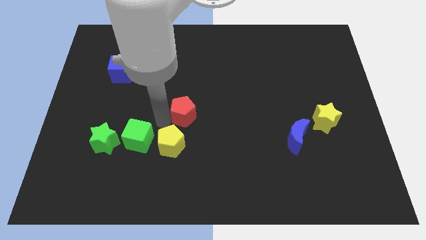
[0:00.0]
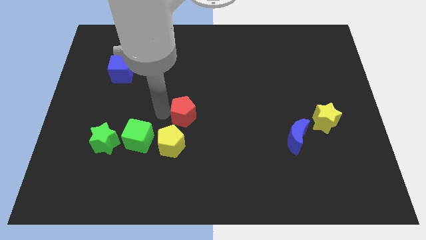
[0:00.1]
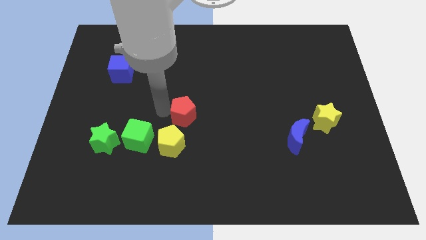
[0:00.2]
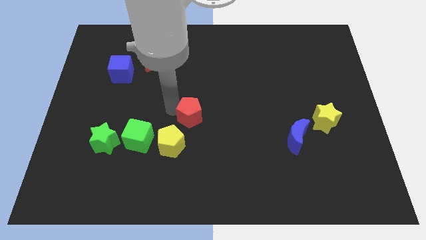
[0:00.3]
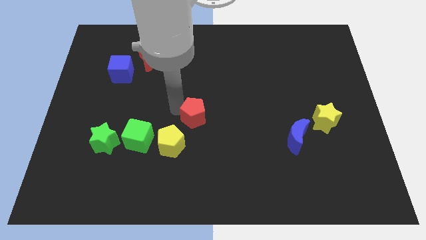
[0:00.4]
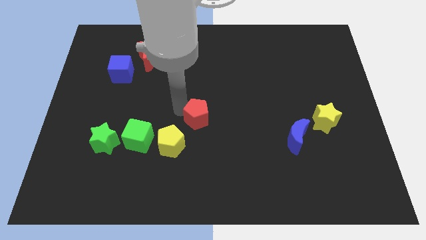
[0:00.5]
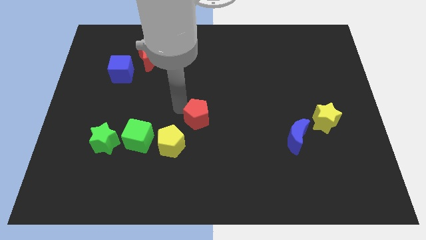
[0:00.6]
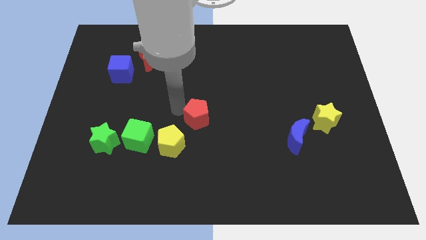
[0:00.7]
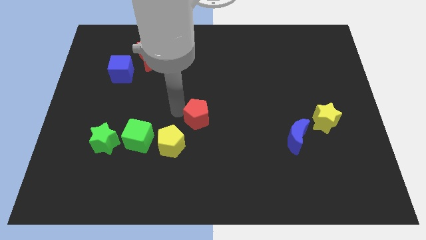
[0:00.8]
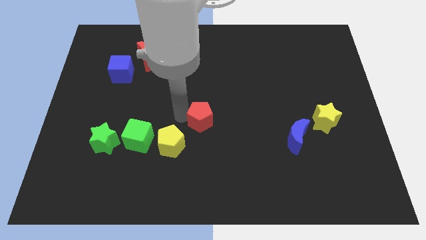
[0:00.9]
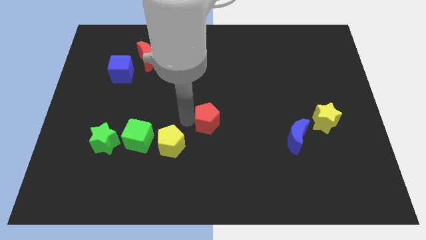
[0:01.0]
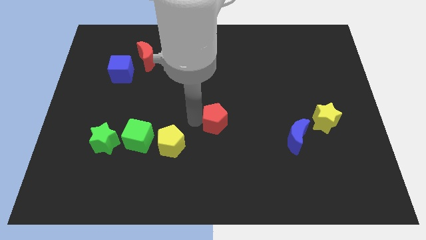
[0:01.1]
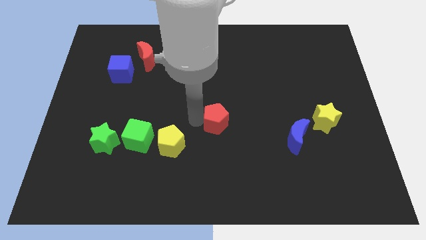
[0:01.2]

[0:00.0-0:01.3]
drag the red pentagon to the right side of the board

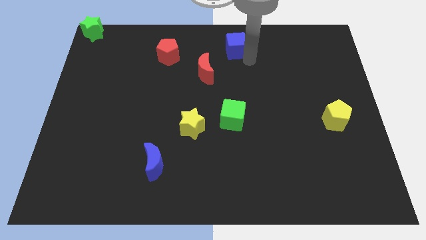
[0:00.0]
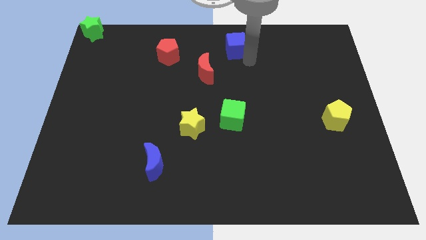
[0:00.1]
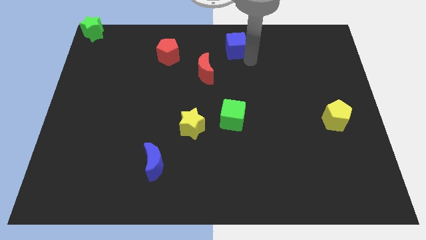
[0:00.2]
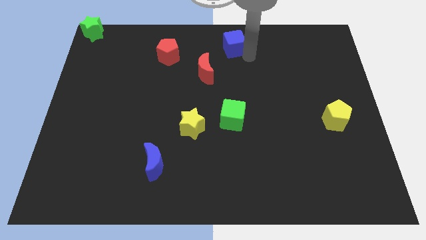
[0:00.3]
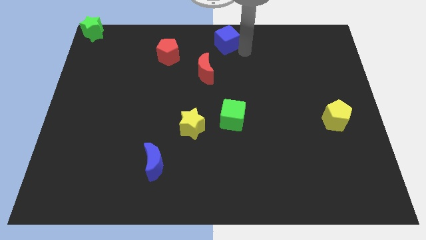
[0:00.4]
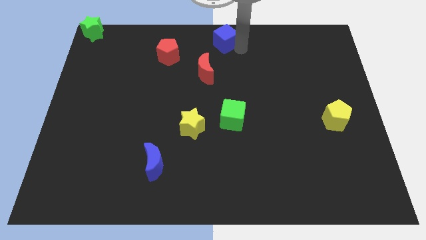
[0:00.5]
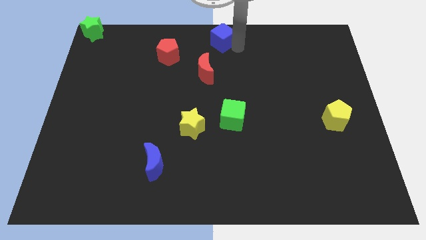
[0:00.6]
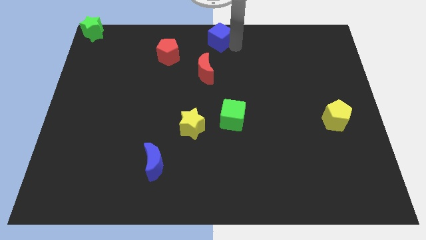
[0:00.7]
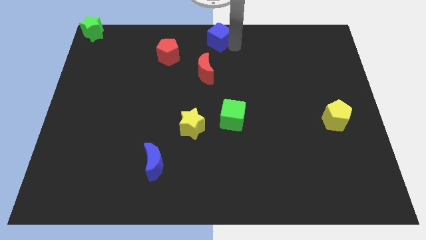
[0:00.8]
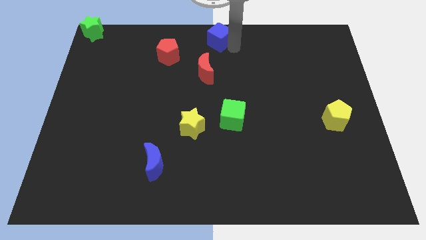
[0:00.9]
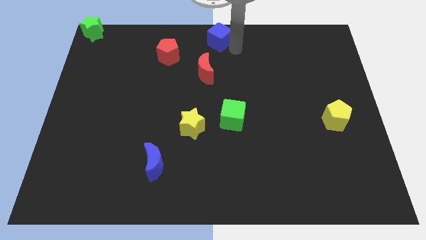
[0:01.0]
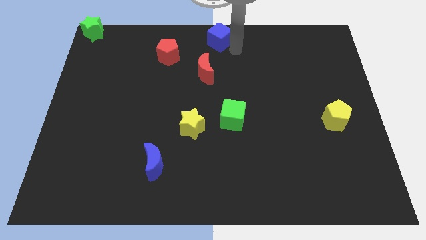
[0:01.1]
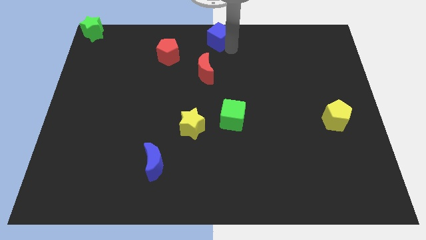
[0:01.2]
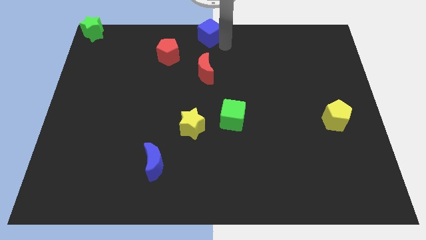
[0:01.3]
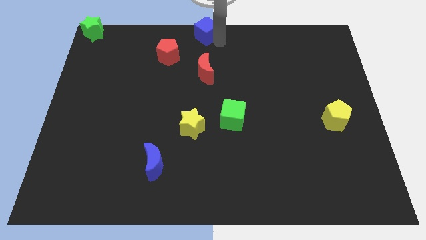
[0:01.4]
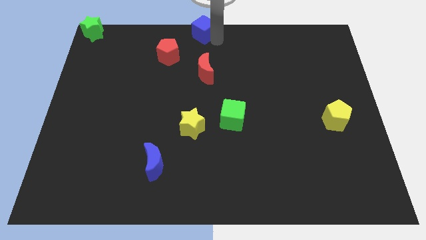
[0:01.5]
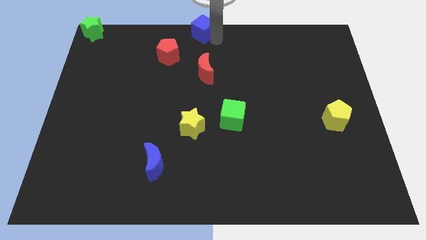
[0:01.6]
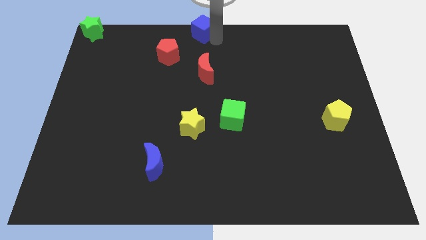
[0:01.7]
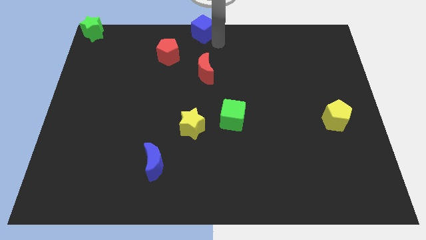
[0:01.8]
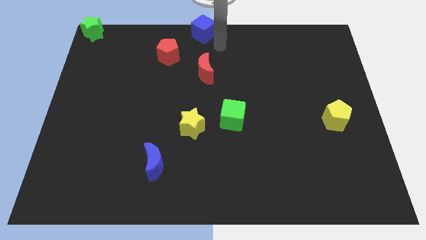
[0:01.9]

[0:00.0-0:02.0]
push blue cube to the top center

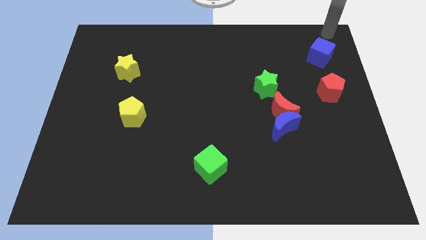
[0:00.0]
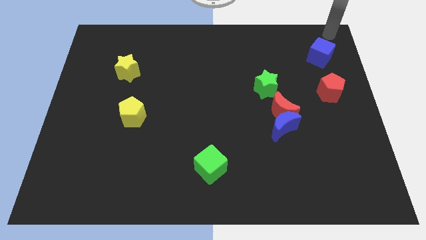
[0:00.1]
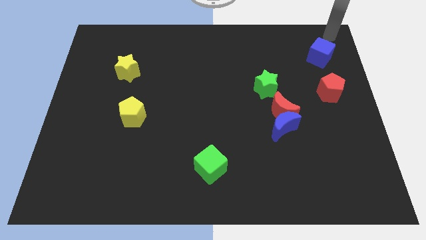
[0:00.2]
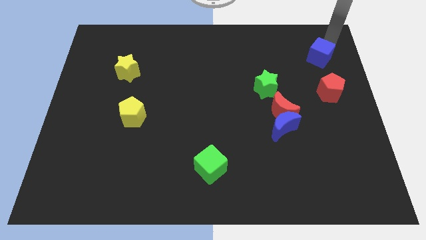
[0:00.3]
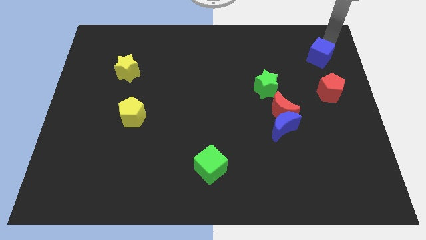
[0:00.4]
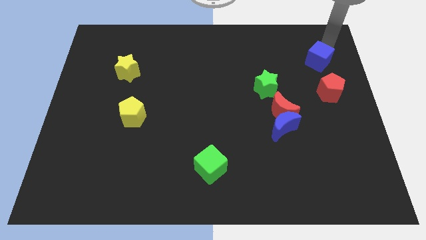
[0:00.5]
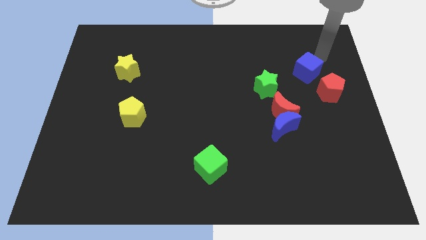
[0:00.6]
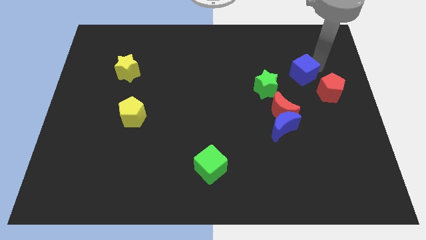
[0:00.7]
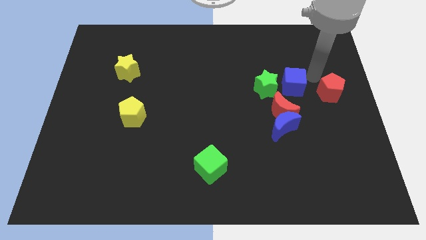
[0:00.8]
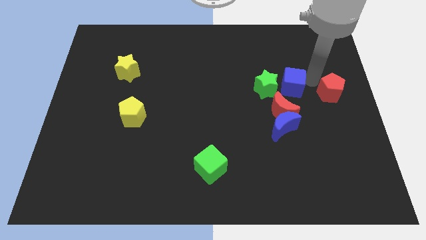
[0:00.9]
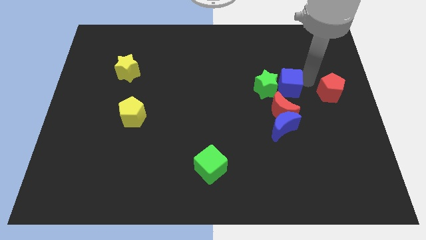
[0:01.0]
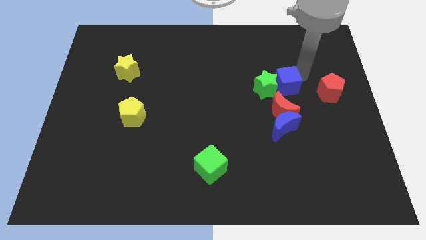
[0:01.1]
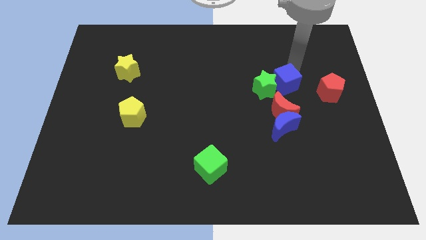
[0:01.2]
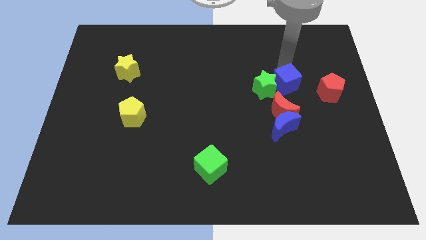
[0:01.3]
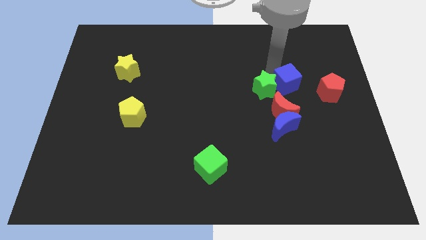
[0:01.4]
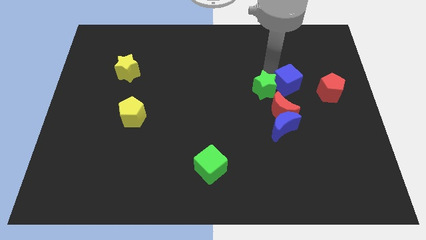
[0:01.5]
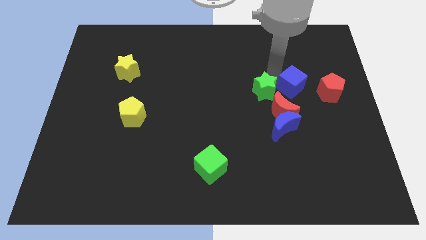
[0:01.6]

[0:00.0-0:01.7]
move the blue cube into the green star

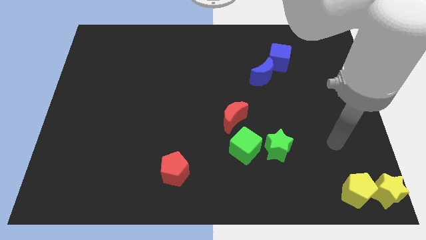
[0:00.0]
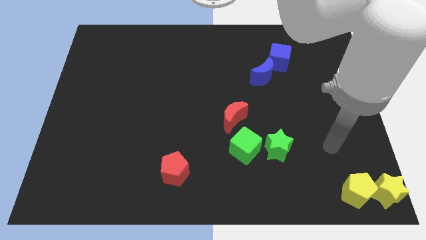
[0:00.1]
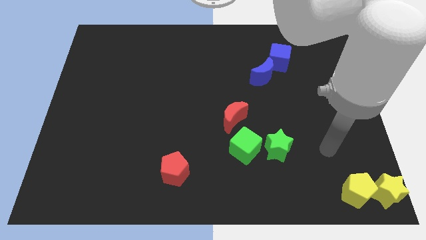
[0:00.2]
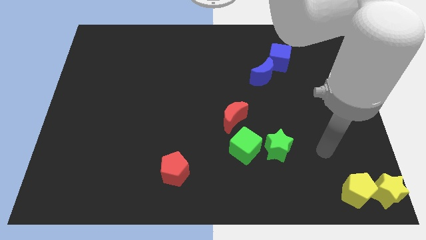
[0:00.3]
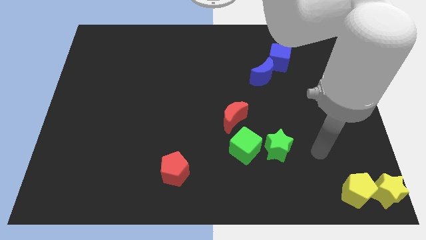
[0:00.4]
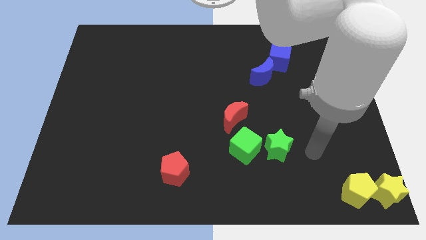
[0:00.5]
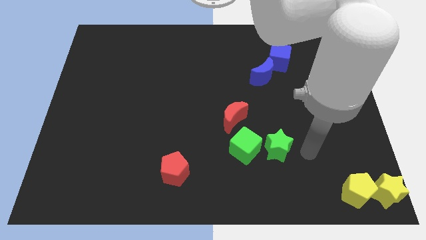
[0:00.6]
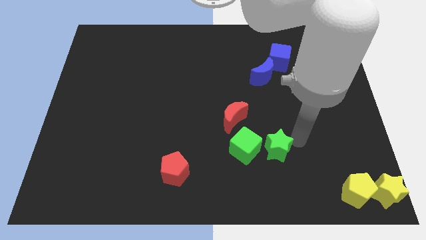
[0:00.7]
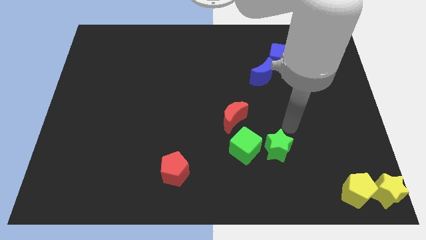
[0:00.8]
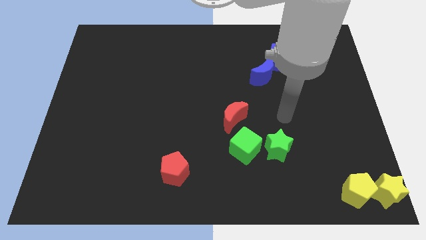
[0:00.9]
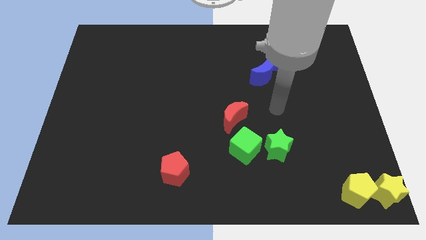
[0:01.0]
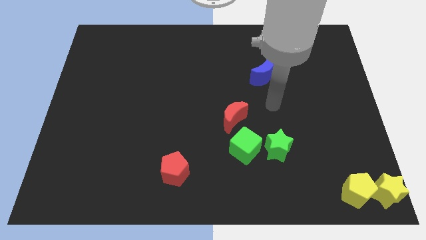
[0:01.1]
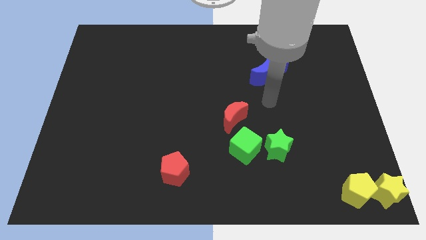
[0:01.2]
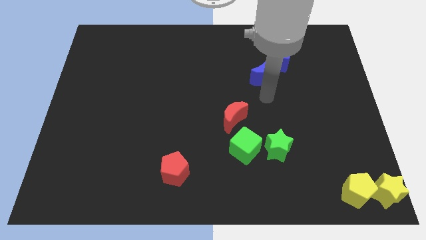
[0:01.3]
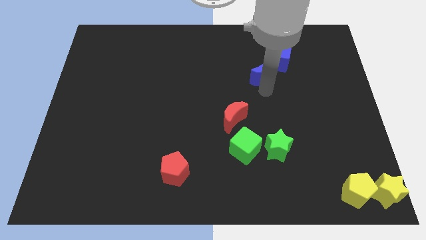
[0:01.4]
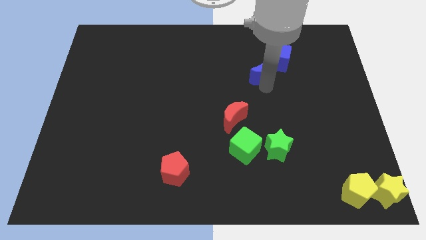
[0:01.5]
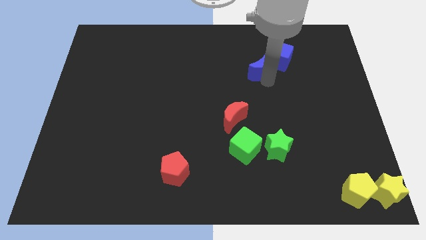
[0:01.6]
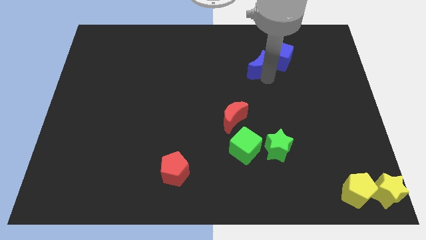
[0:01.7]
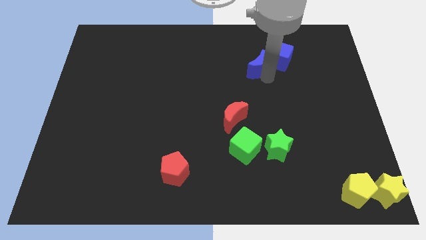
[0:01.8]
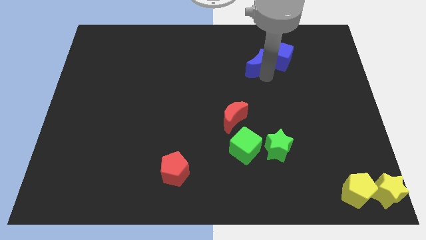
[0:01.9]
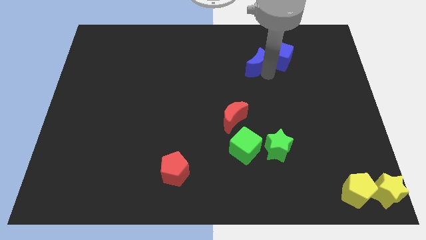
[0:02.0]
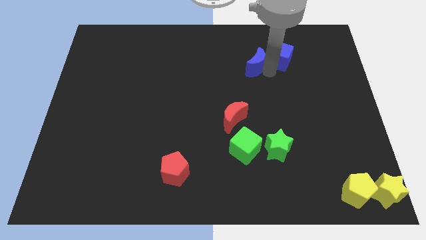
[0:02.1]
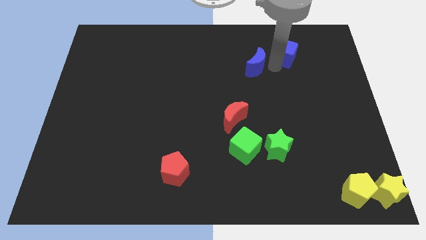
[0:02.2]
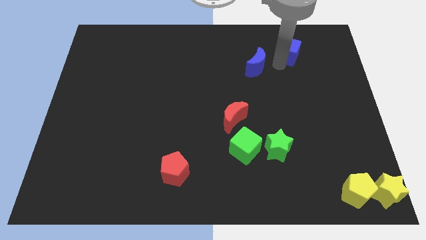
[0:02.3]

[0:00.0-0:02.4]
separate the blue cube and blue crescent

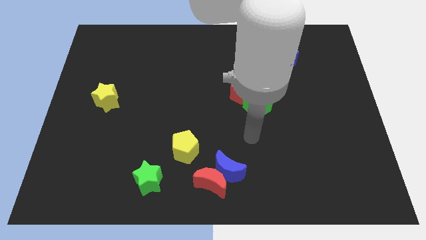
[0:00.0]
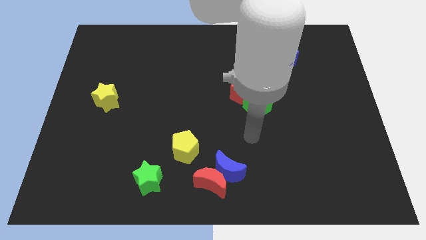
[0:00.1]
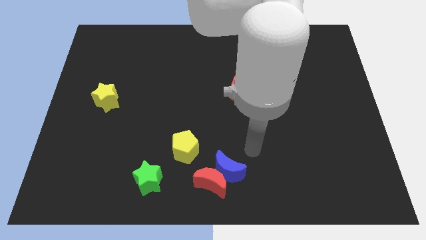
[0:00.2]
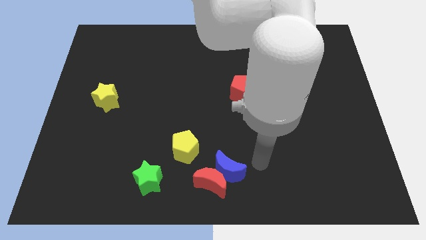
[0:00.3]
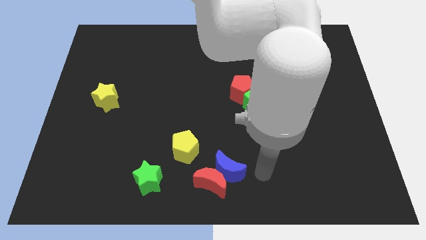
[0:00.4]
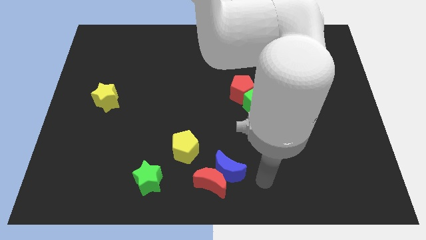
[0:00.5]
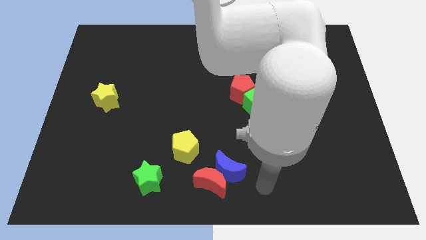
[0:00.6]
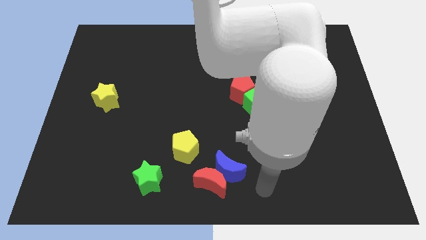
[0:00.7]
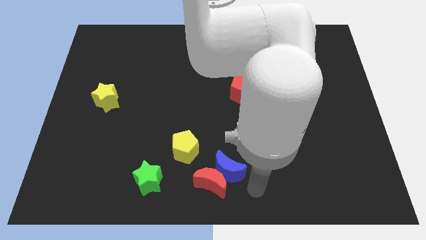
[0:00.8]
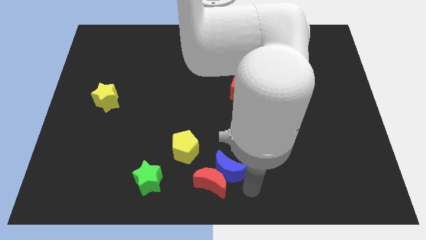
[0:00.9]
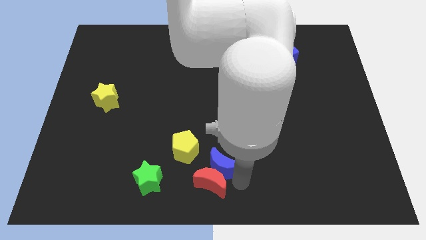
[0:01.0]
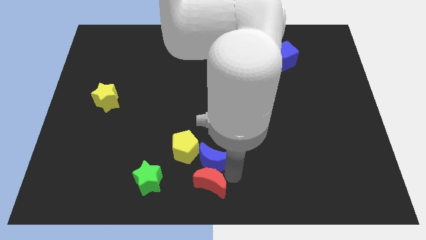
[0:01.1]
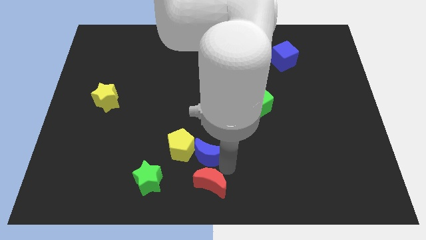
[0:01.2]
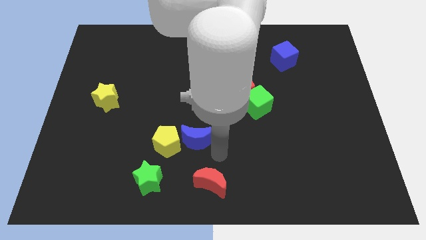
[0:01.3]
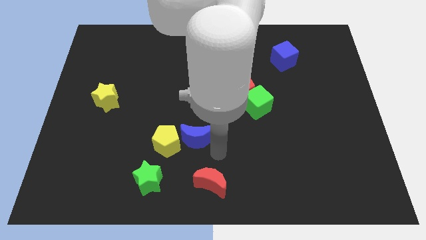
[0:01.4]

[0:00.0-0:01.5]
slide the blue moon diagonally top left to the red moon
